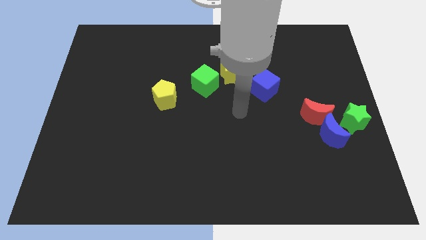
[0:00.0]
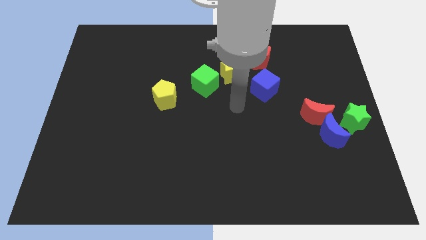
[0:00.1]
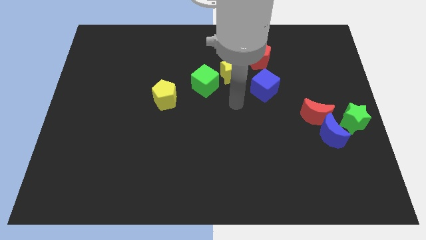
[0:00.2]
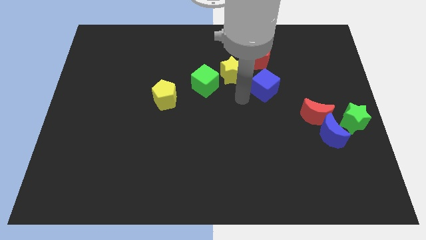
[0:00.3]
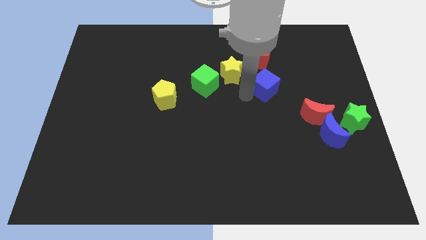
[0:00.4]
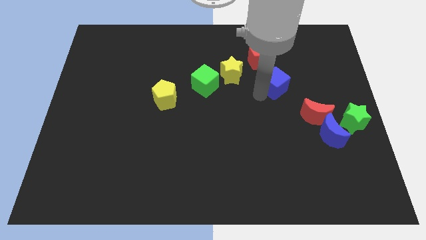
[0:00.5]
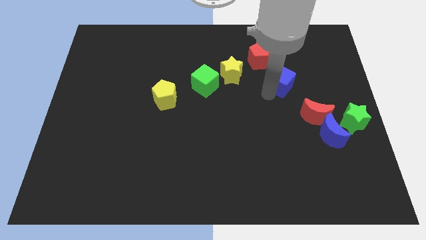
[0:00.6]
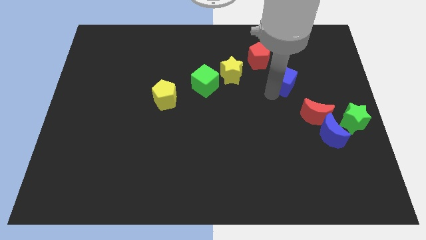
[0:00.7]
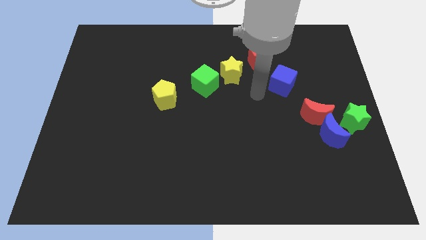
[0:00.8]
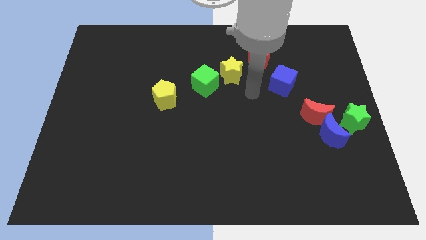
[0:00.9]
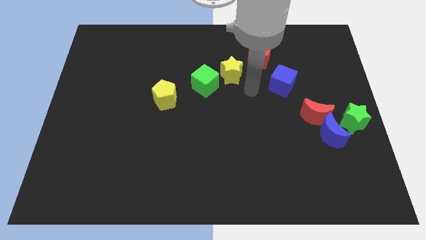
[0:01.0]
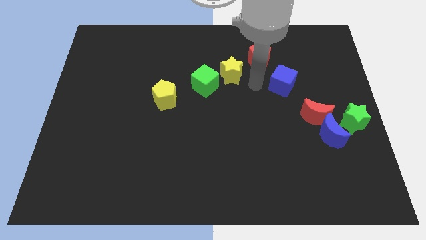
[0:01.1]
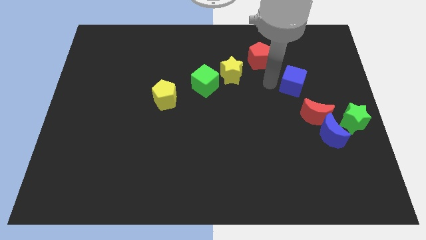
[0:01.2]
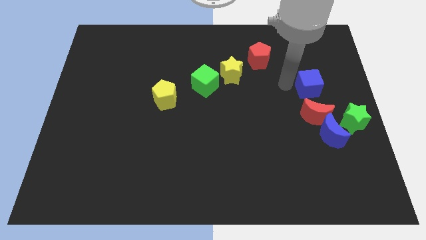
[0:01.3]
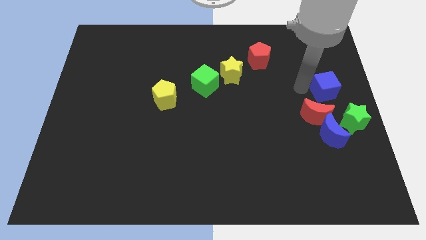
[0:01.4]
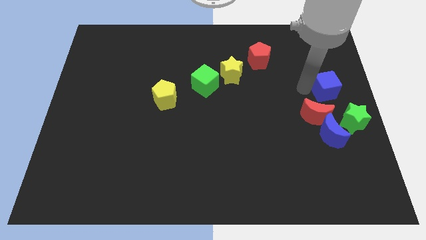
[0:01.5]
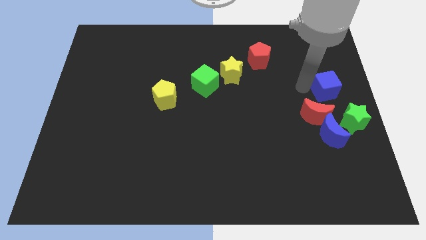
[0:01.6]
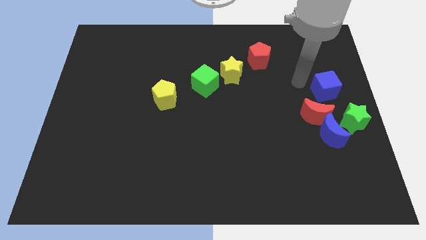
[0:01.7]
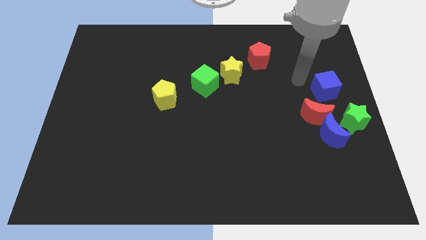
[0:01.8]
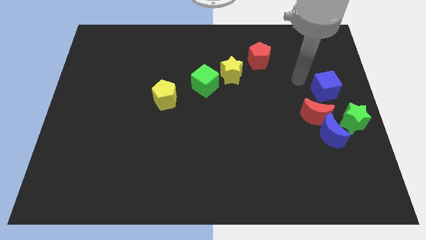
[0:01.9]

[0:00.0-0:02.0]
put the blue cube above the red moon

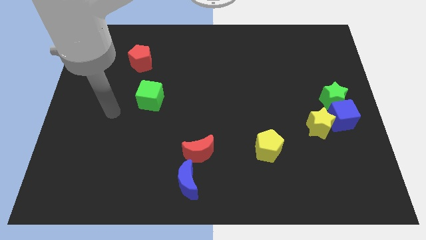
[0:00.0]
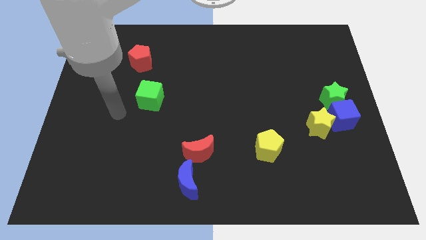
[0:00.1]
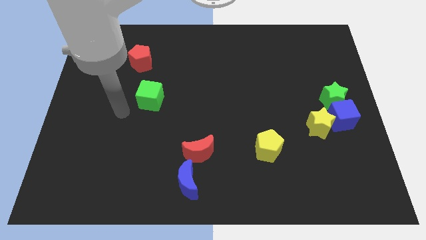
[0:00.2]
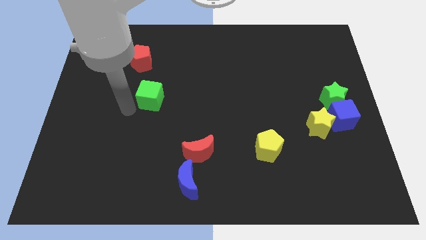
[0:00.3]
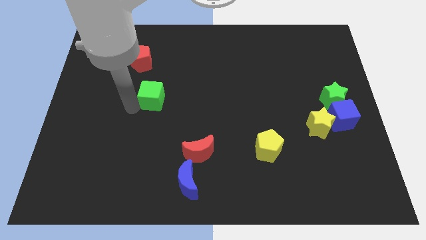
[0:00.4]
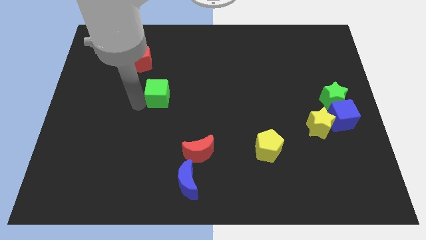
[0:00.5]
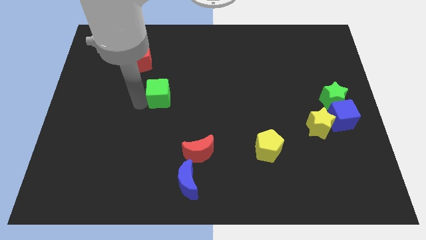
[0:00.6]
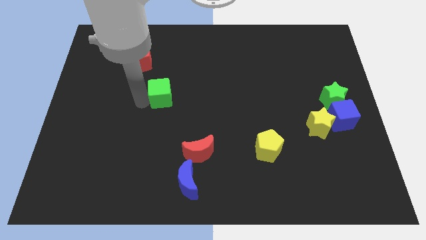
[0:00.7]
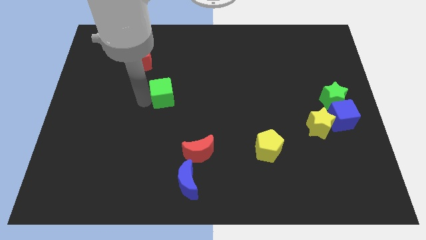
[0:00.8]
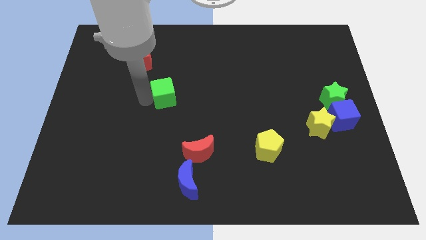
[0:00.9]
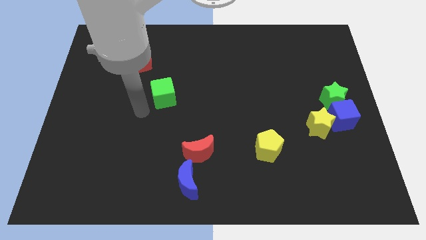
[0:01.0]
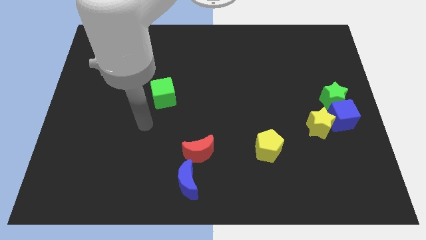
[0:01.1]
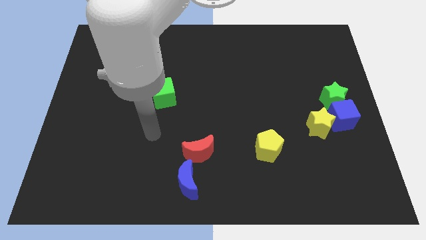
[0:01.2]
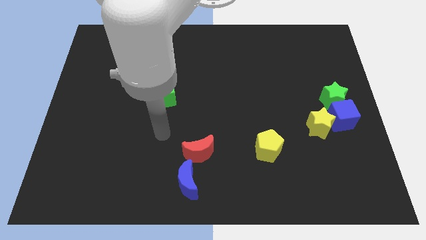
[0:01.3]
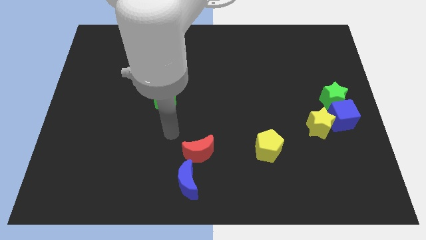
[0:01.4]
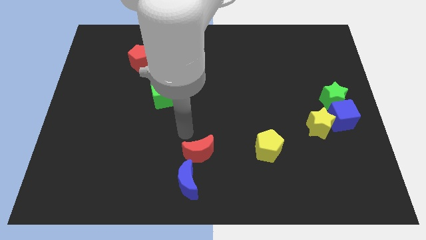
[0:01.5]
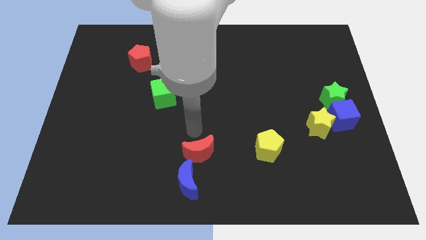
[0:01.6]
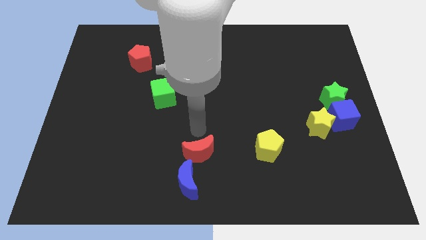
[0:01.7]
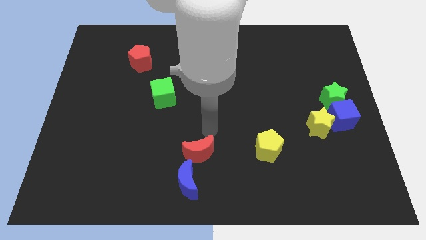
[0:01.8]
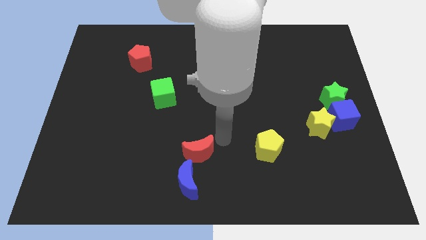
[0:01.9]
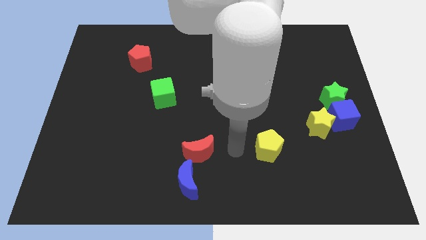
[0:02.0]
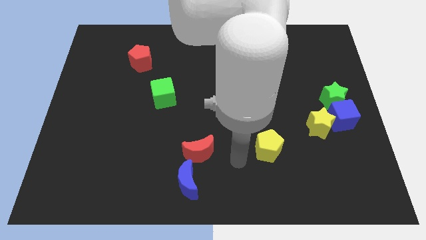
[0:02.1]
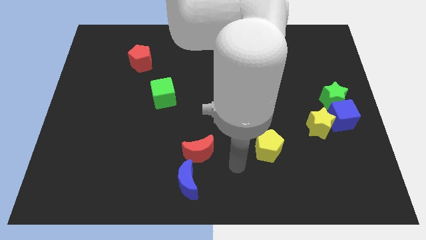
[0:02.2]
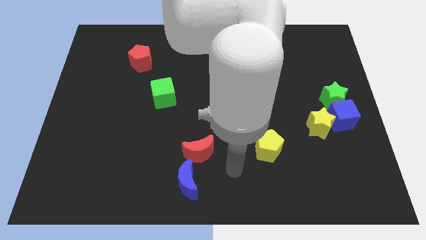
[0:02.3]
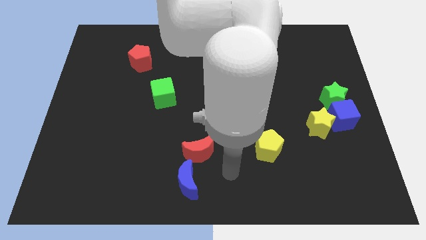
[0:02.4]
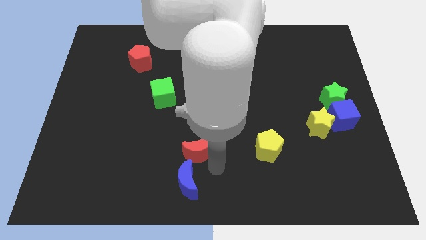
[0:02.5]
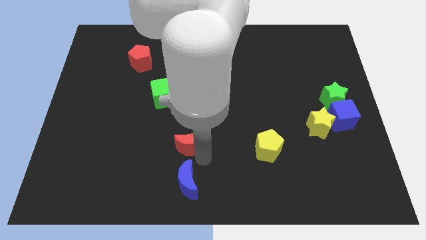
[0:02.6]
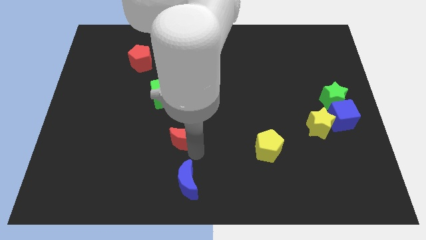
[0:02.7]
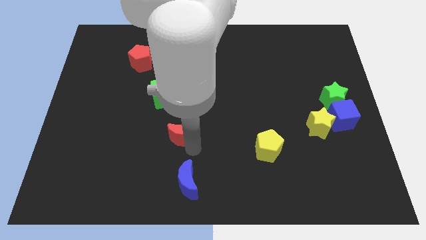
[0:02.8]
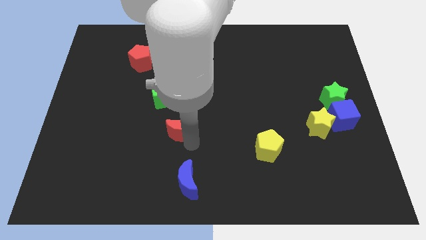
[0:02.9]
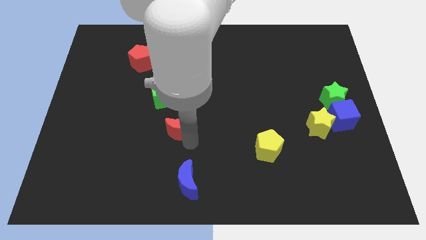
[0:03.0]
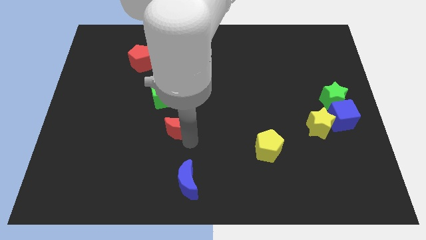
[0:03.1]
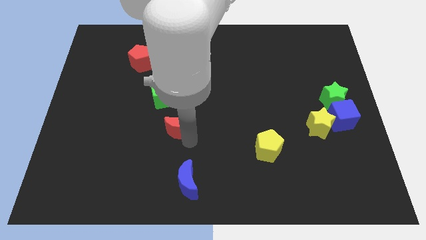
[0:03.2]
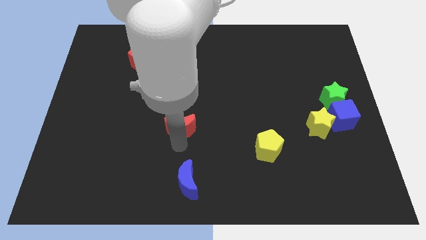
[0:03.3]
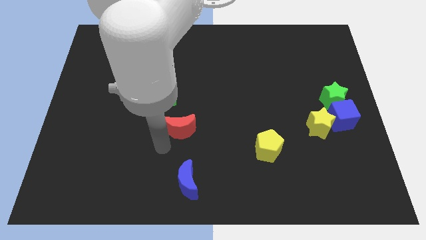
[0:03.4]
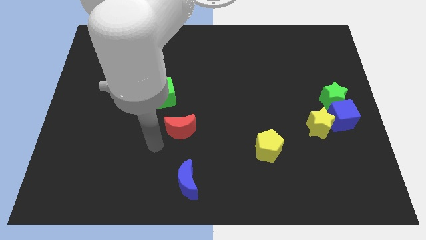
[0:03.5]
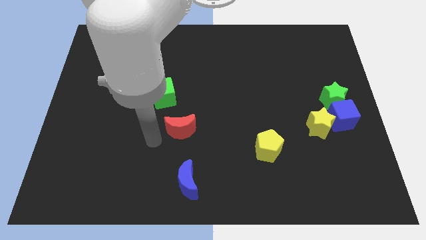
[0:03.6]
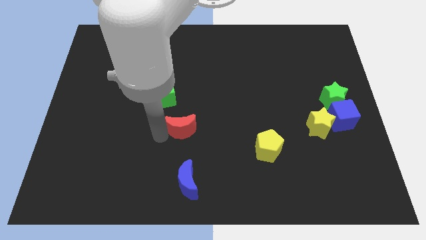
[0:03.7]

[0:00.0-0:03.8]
place red crescent to the bottom of the green cube

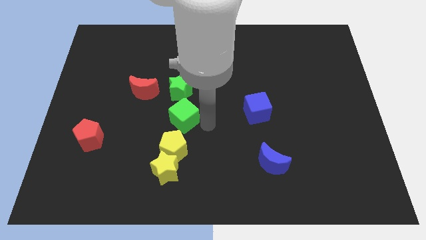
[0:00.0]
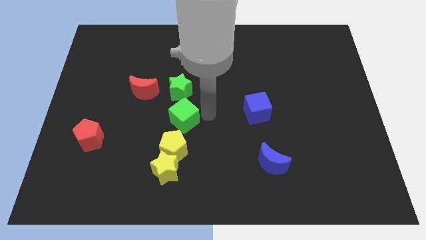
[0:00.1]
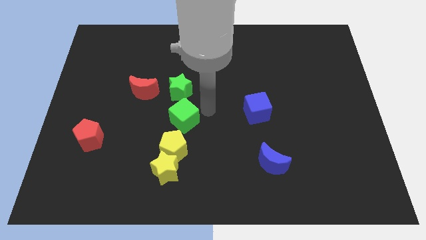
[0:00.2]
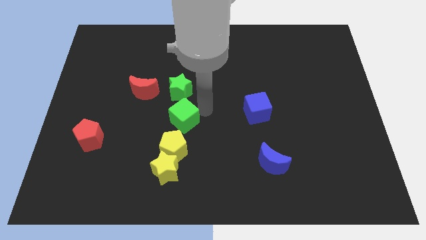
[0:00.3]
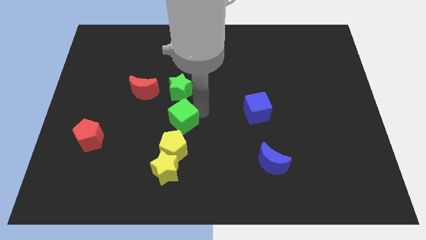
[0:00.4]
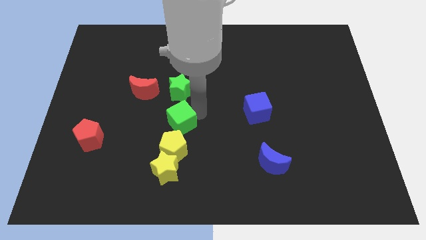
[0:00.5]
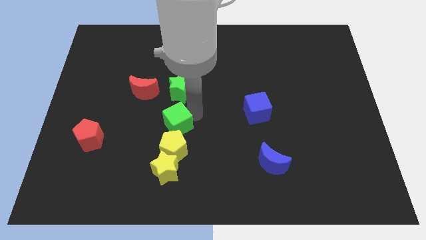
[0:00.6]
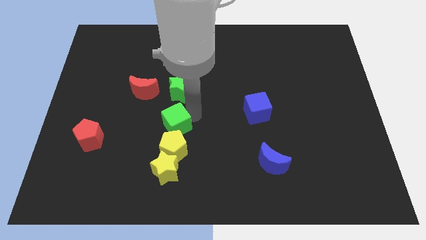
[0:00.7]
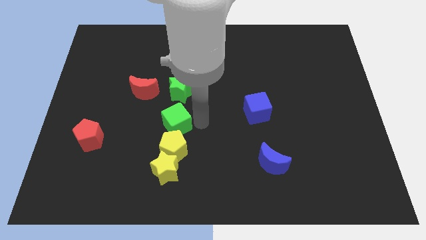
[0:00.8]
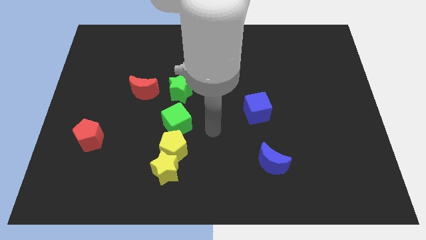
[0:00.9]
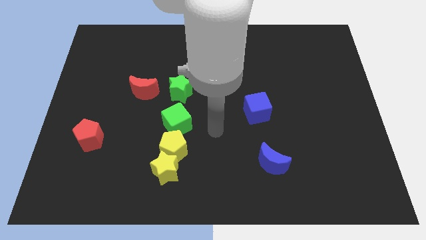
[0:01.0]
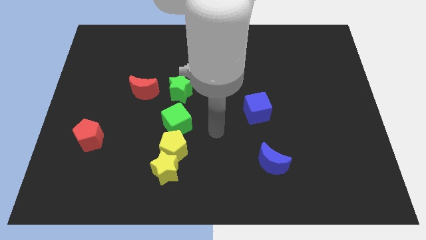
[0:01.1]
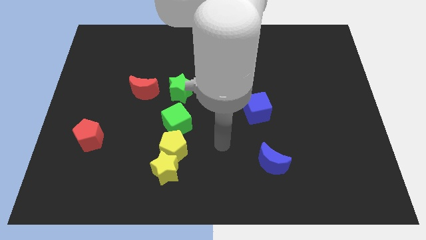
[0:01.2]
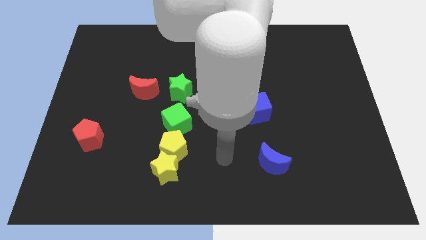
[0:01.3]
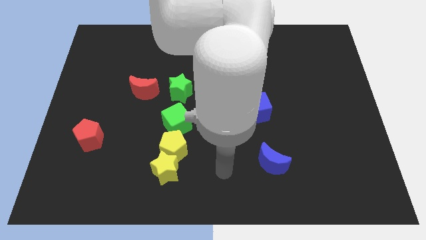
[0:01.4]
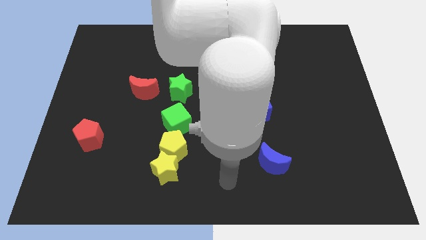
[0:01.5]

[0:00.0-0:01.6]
move the green cube to the top side of the yellow pentagon

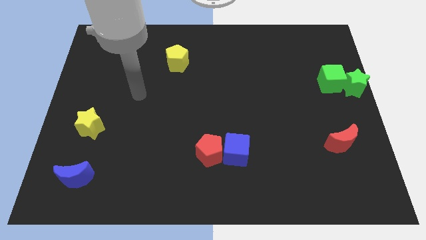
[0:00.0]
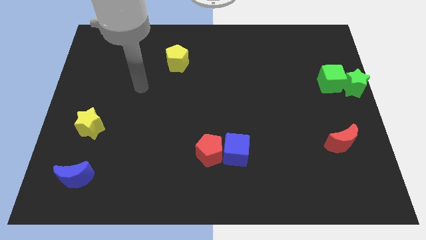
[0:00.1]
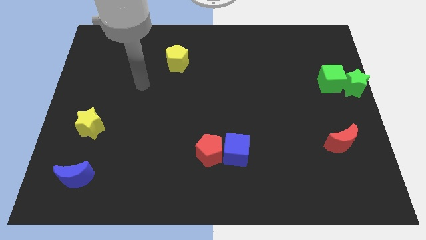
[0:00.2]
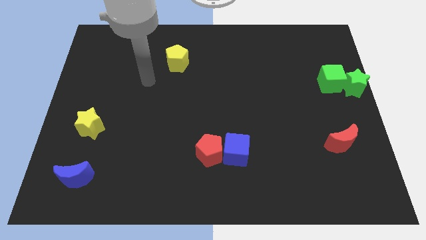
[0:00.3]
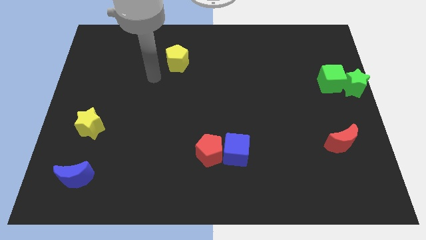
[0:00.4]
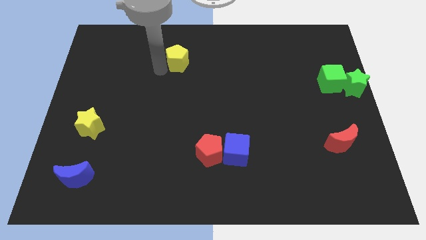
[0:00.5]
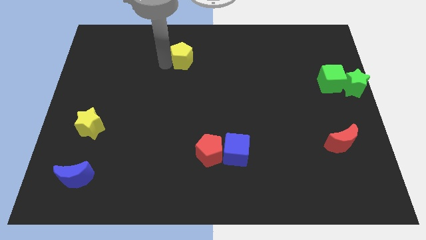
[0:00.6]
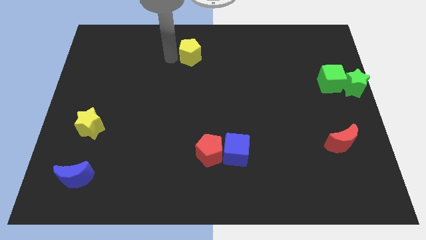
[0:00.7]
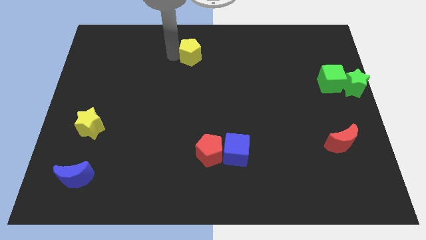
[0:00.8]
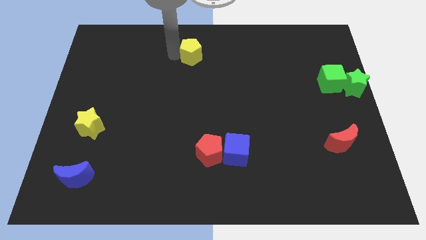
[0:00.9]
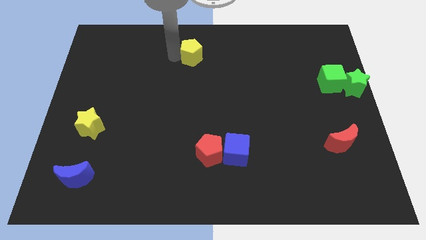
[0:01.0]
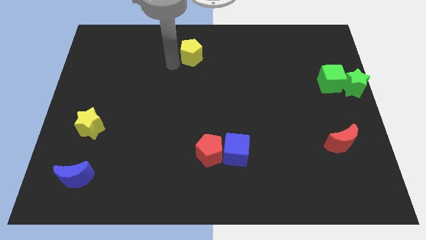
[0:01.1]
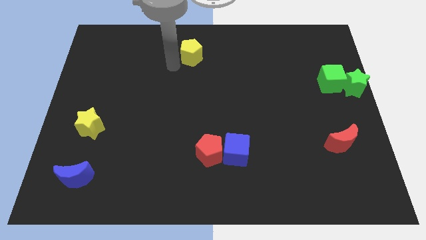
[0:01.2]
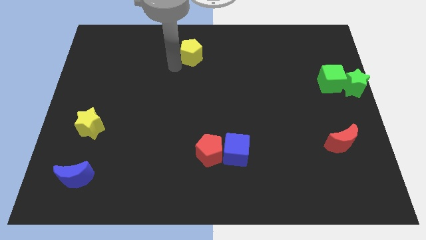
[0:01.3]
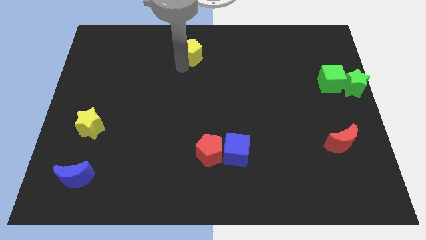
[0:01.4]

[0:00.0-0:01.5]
slightly push the yellow pentagon to the right side of your arm
